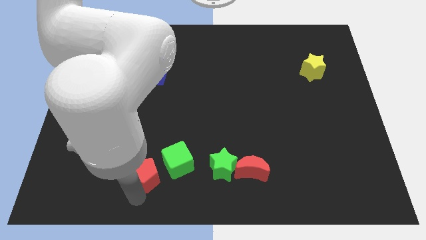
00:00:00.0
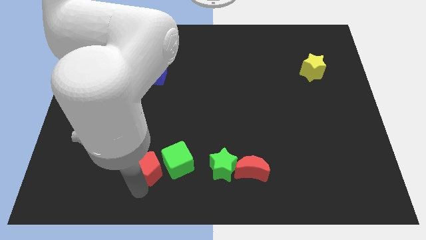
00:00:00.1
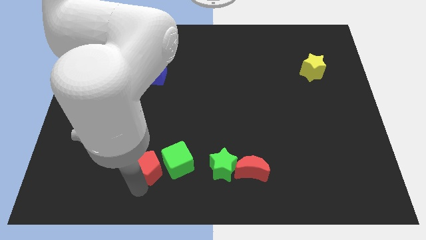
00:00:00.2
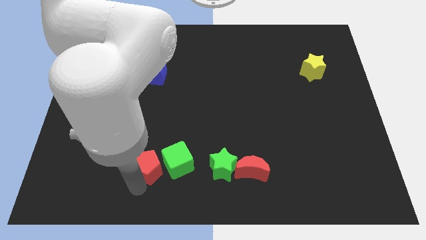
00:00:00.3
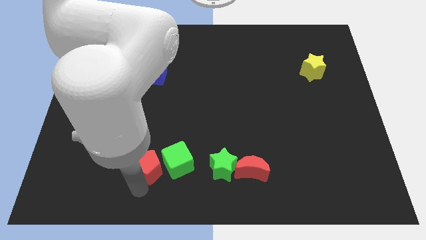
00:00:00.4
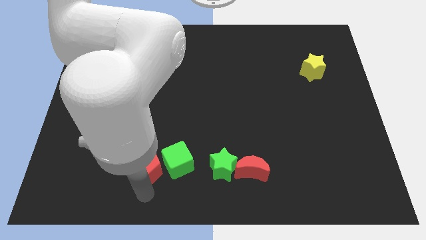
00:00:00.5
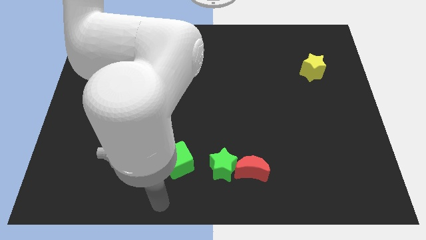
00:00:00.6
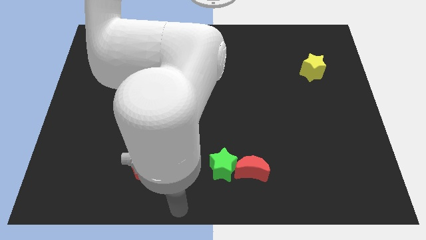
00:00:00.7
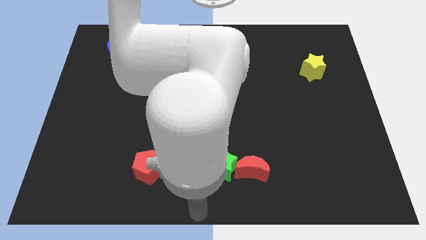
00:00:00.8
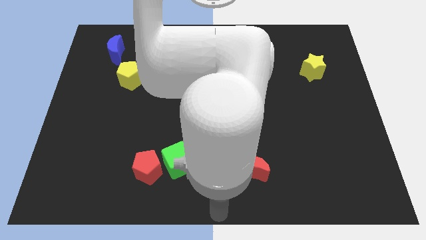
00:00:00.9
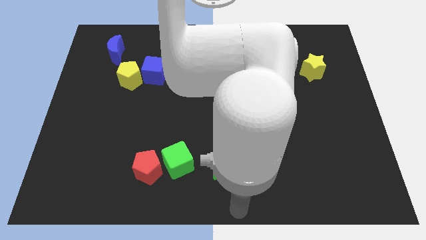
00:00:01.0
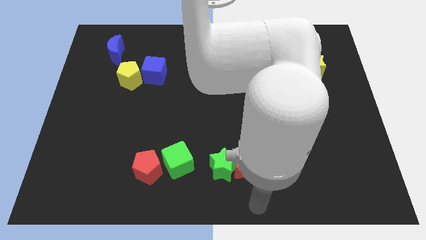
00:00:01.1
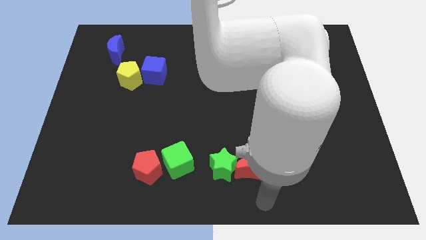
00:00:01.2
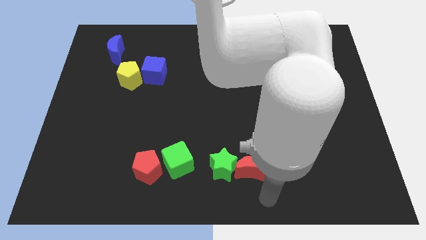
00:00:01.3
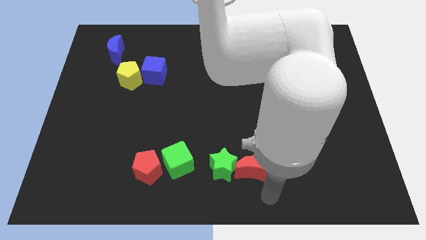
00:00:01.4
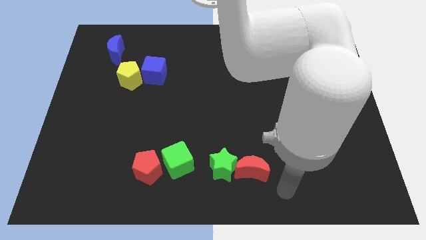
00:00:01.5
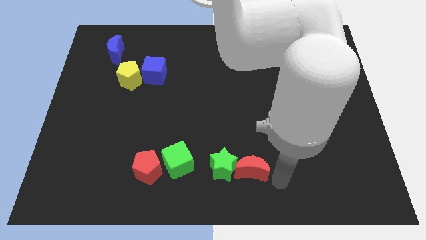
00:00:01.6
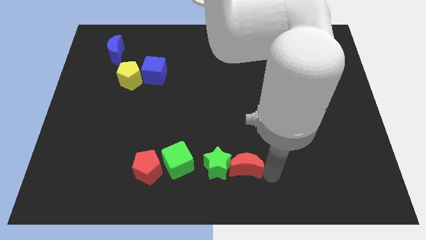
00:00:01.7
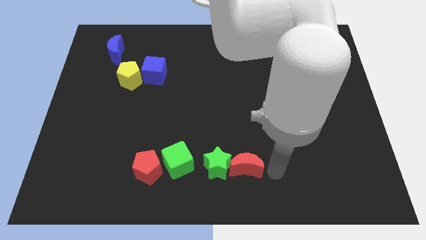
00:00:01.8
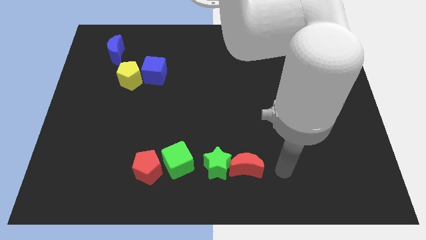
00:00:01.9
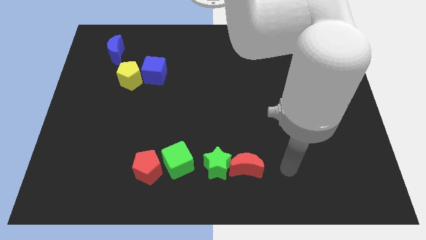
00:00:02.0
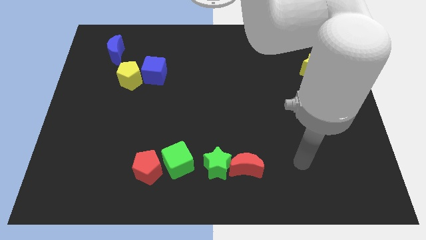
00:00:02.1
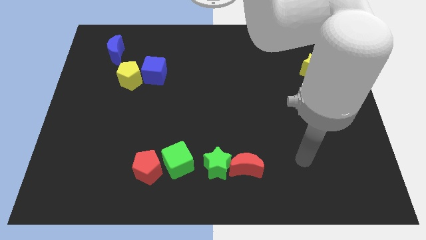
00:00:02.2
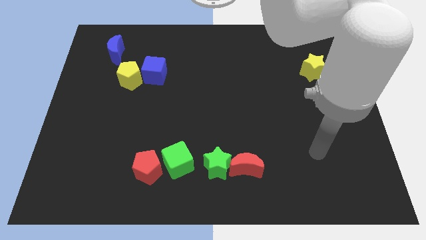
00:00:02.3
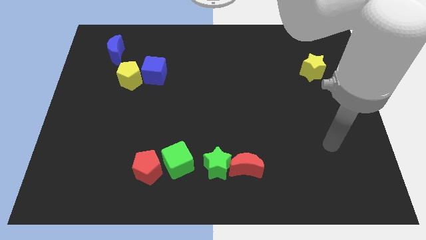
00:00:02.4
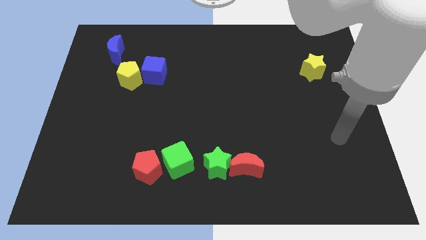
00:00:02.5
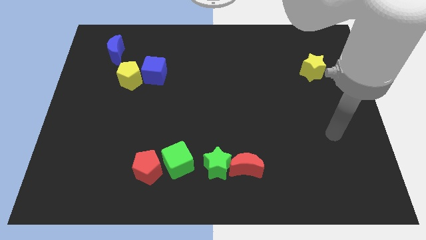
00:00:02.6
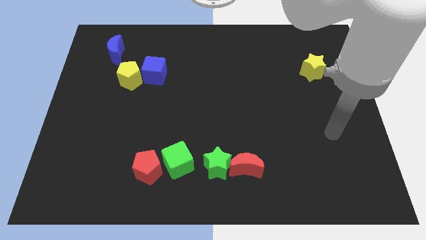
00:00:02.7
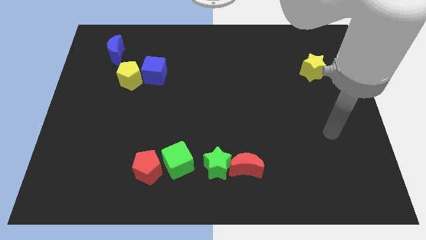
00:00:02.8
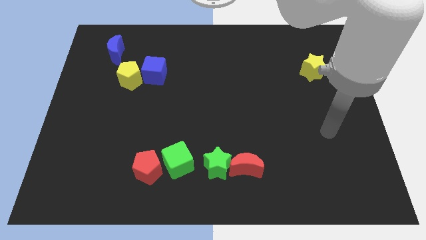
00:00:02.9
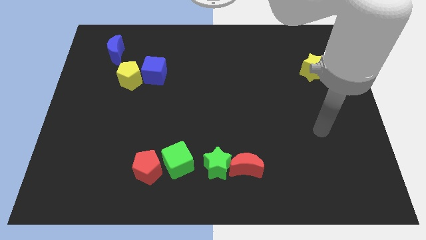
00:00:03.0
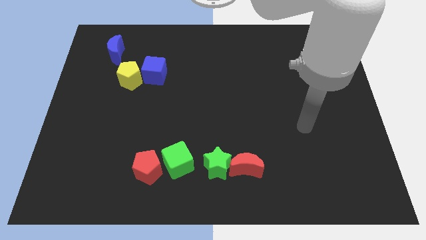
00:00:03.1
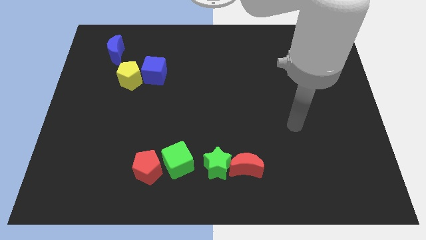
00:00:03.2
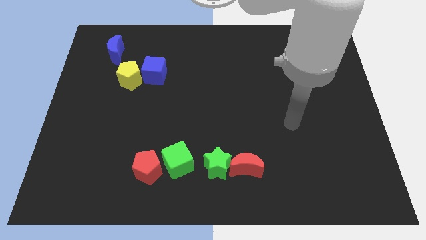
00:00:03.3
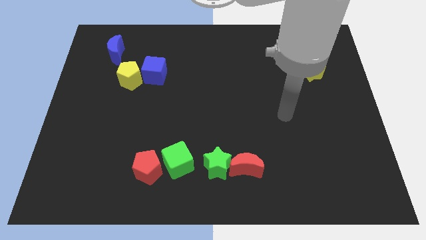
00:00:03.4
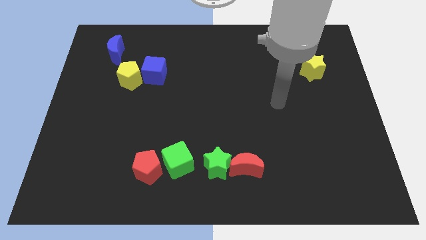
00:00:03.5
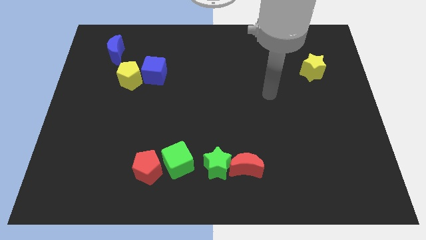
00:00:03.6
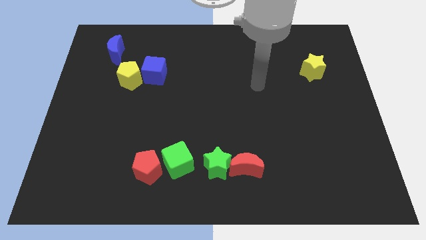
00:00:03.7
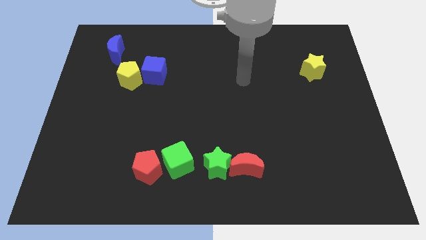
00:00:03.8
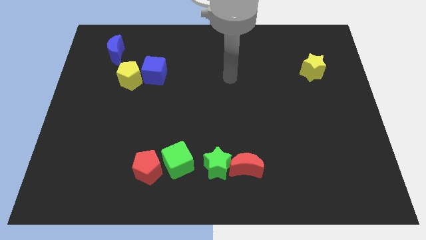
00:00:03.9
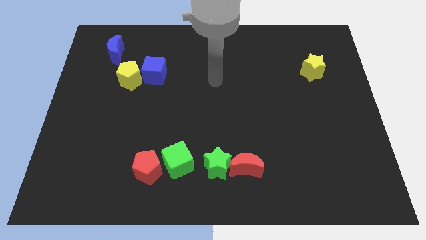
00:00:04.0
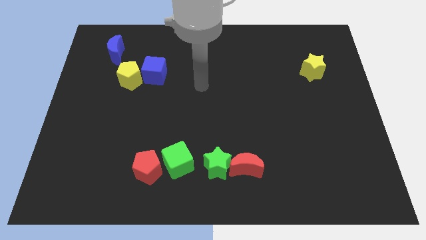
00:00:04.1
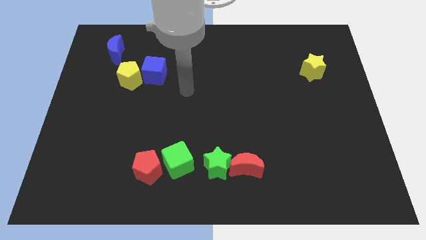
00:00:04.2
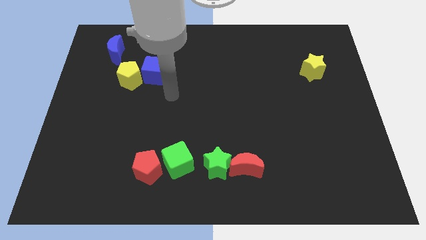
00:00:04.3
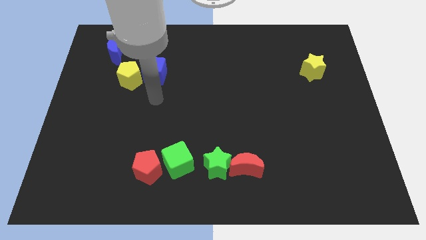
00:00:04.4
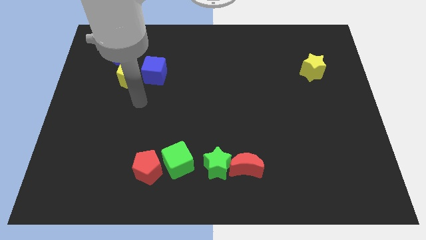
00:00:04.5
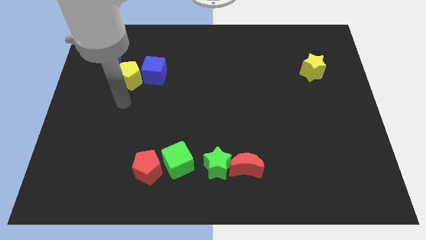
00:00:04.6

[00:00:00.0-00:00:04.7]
move your arm to the bottom of the yellow pentagon

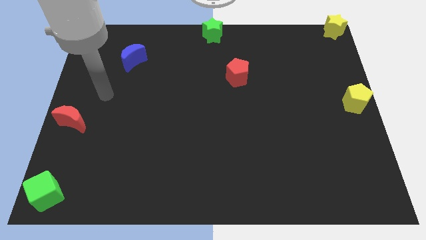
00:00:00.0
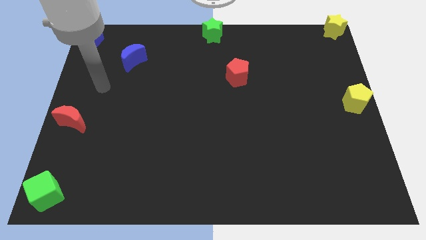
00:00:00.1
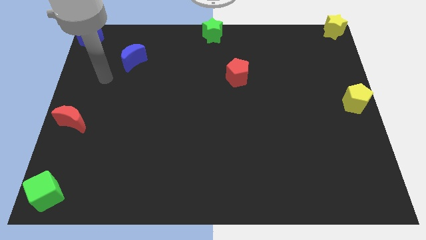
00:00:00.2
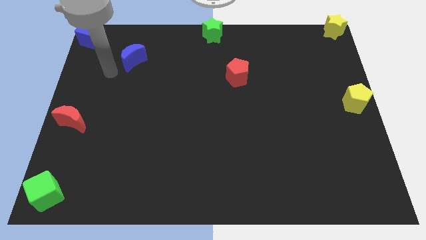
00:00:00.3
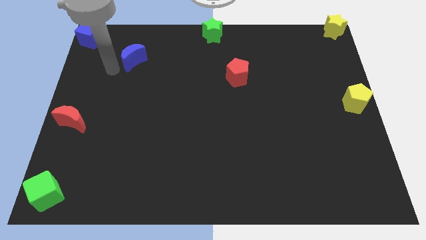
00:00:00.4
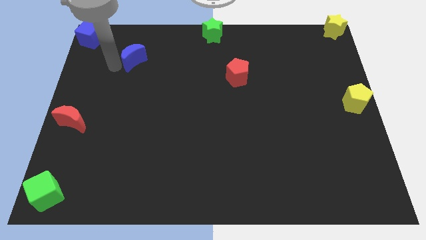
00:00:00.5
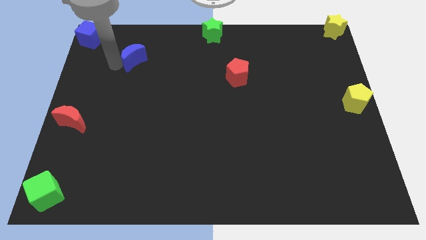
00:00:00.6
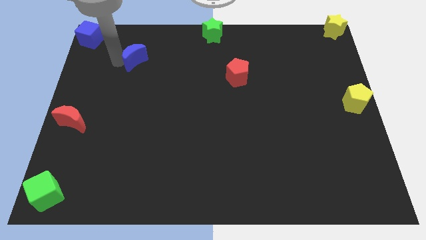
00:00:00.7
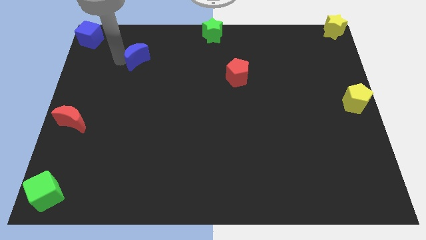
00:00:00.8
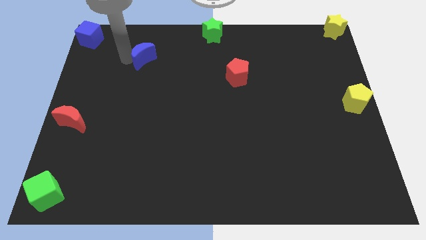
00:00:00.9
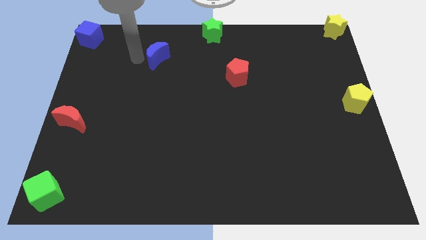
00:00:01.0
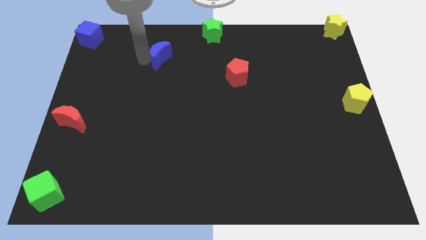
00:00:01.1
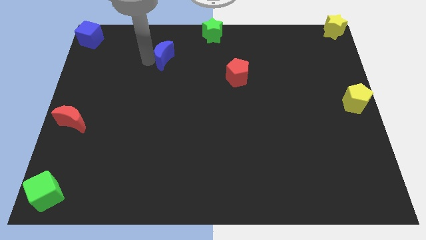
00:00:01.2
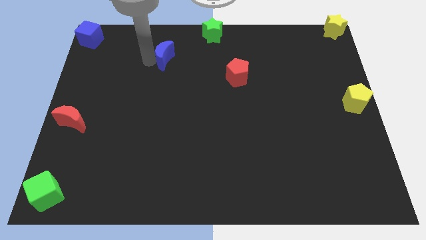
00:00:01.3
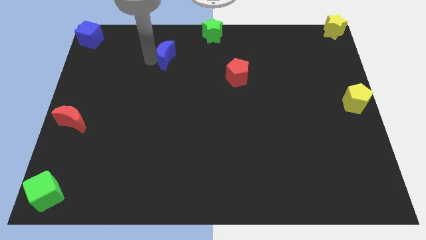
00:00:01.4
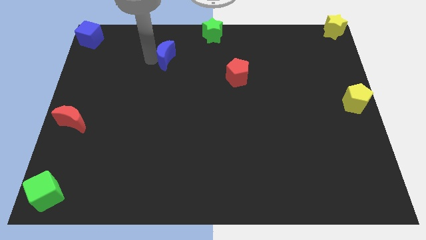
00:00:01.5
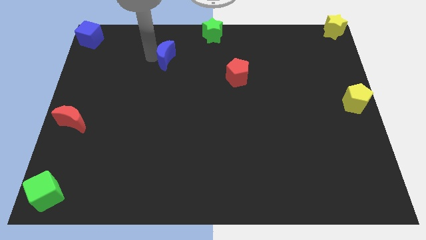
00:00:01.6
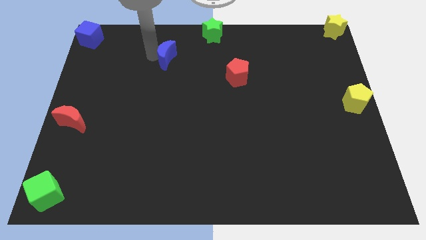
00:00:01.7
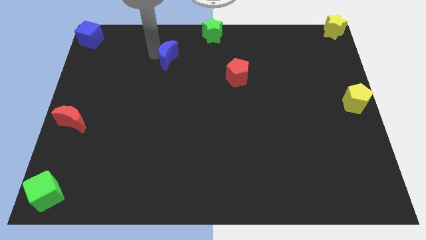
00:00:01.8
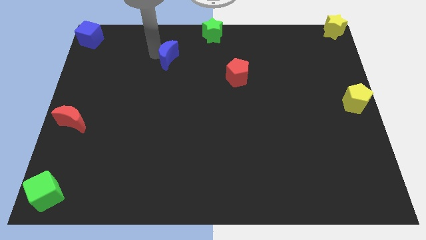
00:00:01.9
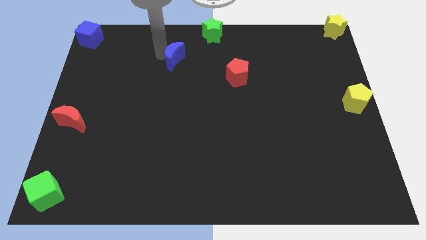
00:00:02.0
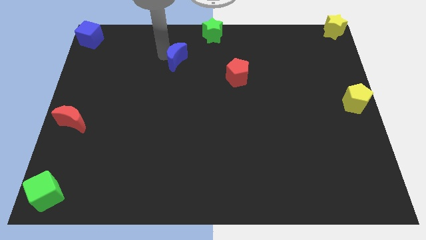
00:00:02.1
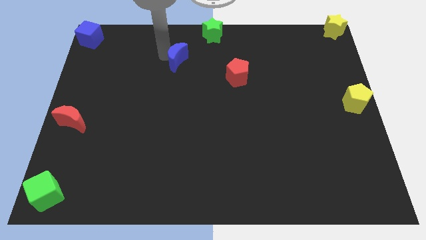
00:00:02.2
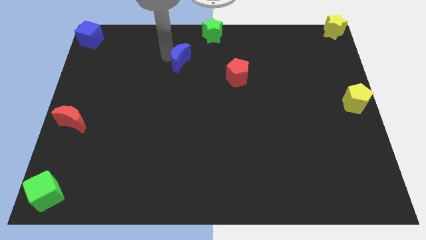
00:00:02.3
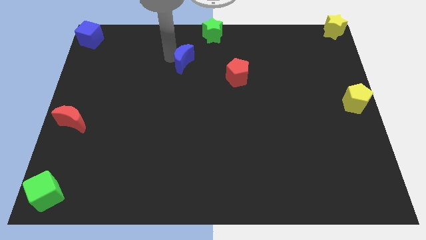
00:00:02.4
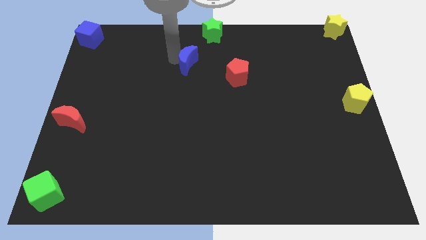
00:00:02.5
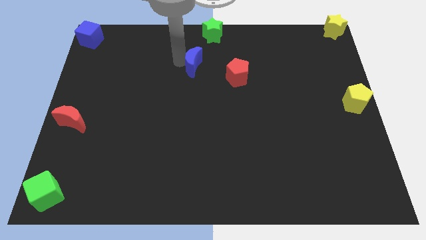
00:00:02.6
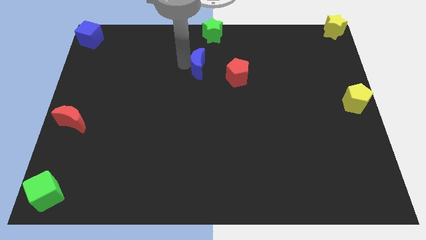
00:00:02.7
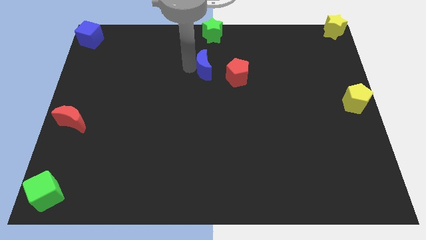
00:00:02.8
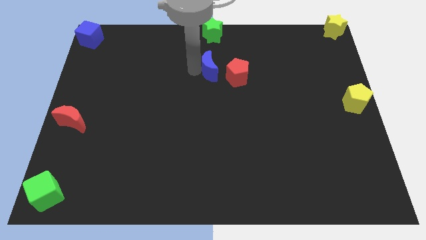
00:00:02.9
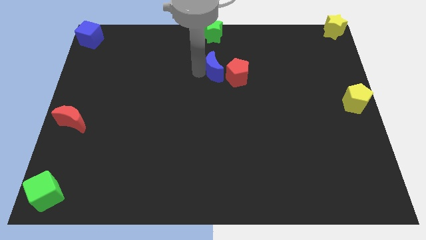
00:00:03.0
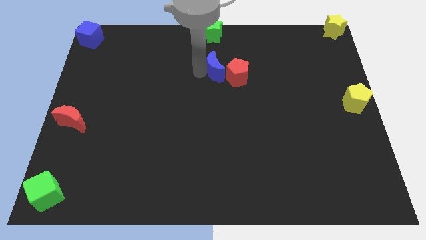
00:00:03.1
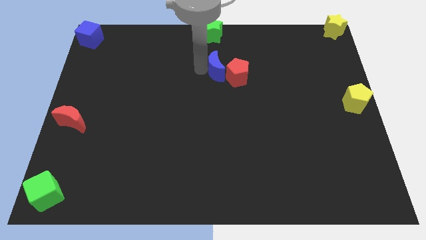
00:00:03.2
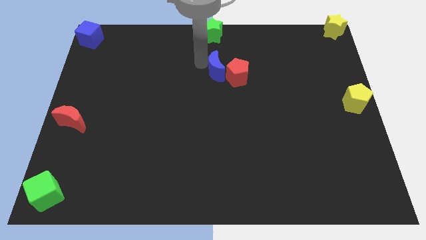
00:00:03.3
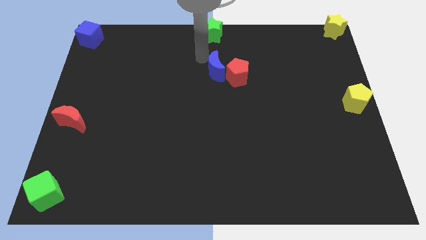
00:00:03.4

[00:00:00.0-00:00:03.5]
move the blue crescent left to the red pentagon

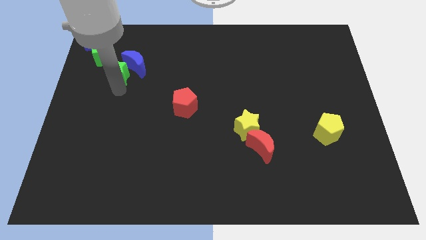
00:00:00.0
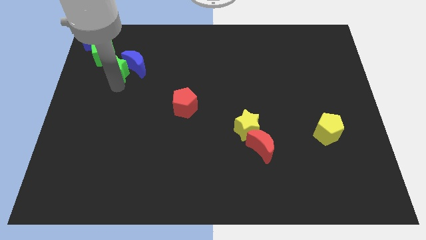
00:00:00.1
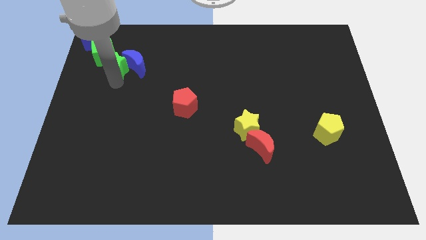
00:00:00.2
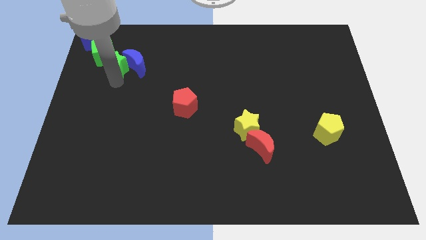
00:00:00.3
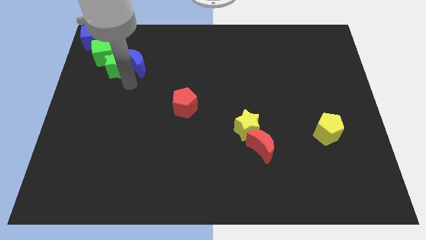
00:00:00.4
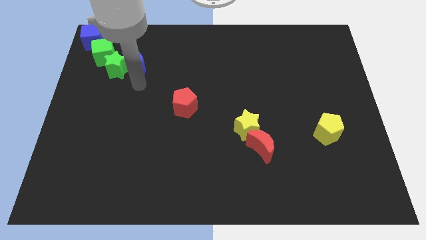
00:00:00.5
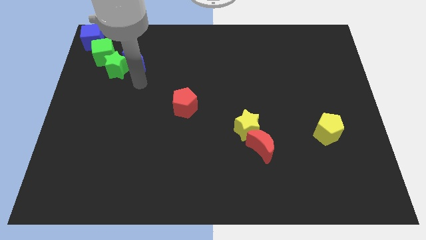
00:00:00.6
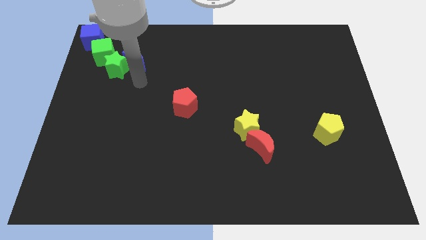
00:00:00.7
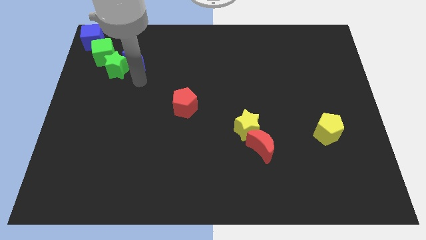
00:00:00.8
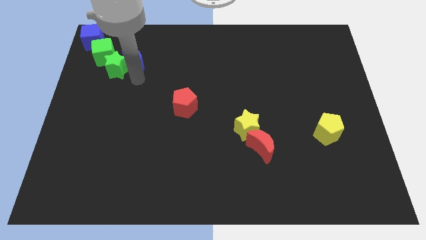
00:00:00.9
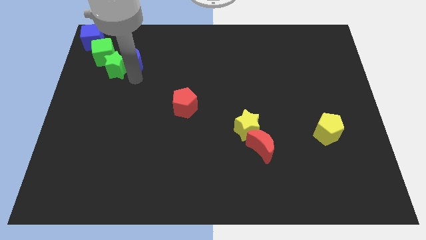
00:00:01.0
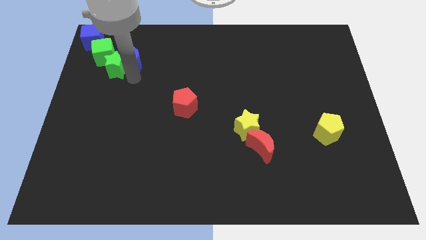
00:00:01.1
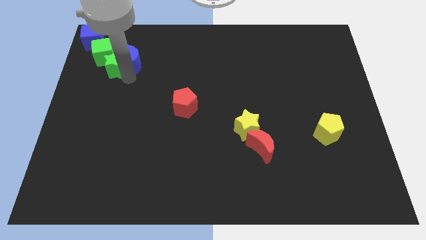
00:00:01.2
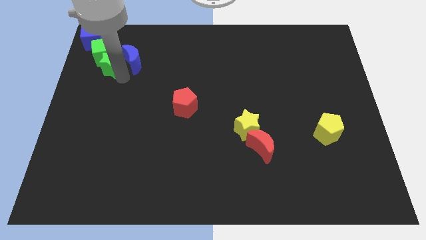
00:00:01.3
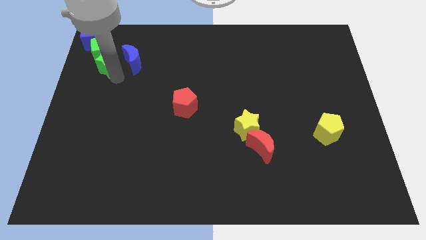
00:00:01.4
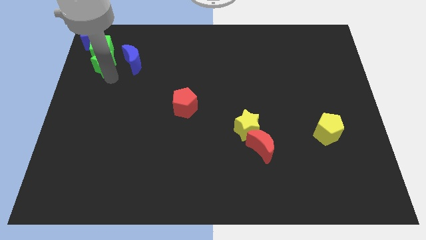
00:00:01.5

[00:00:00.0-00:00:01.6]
push the green star below the green cube
